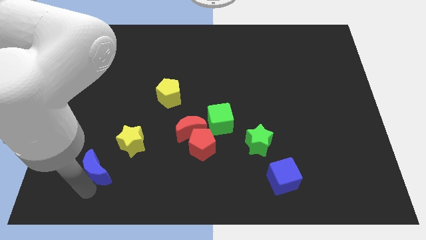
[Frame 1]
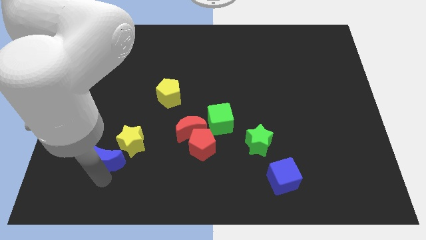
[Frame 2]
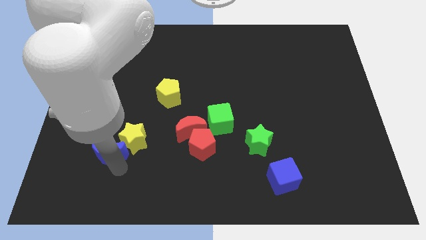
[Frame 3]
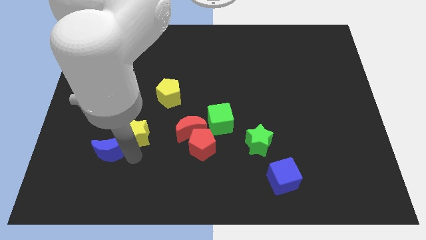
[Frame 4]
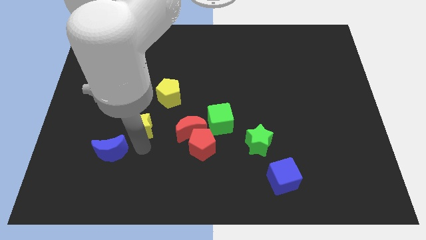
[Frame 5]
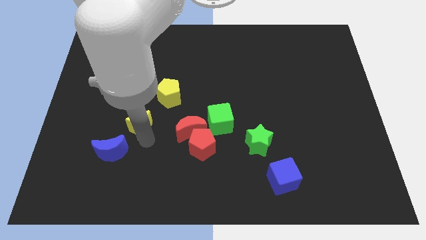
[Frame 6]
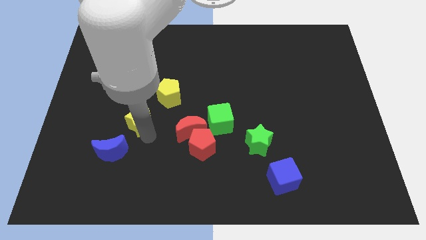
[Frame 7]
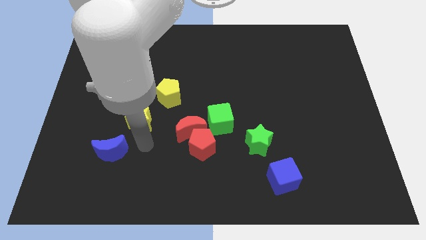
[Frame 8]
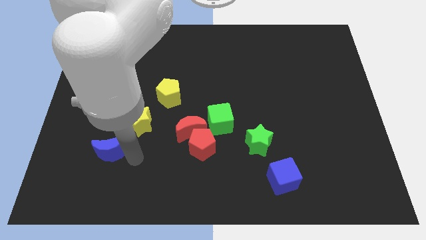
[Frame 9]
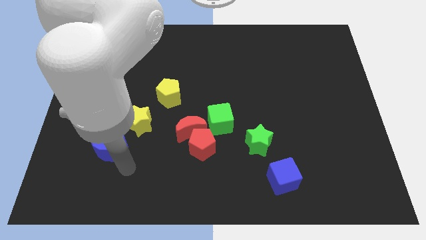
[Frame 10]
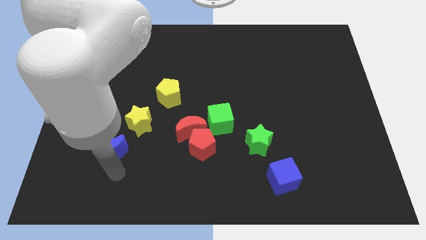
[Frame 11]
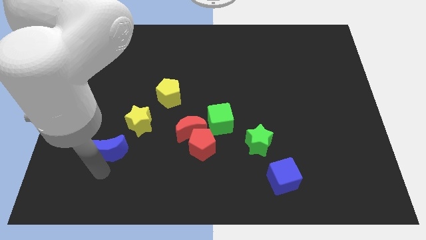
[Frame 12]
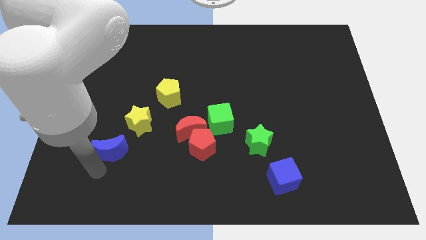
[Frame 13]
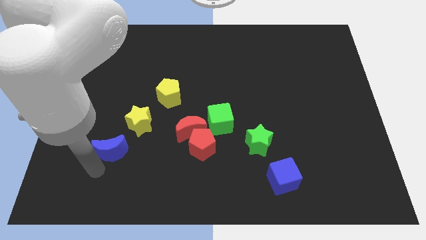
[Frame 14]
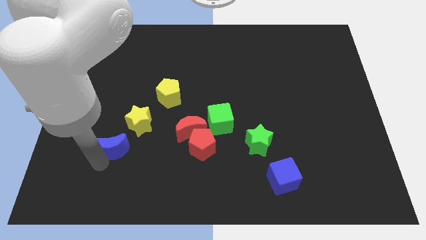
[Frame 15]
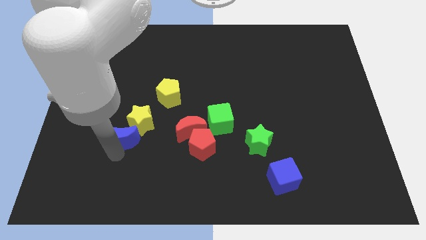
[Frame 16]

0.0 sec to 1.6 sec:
move the blue moon into the yellow star

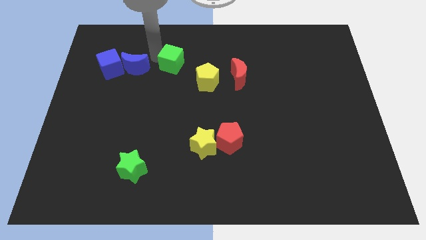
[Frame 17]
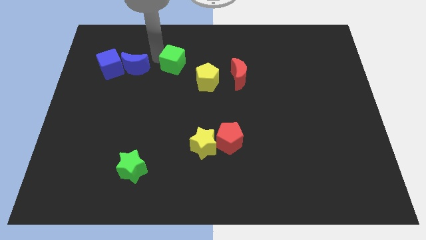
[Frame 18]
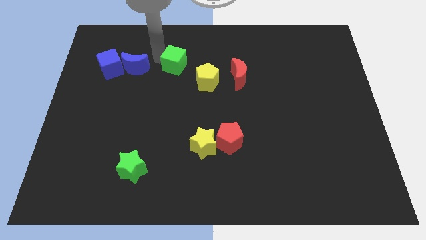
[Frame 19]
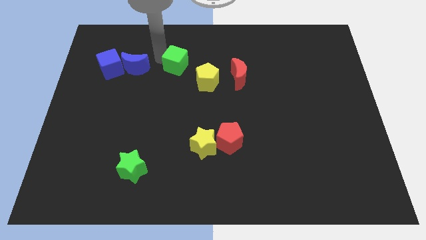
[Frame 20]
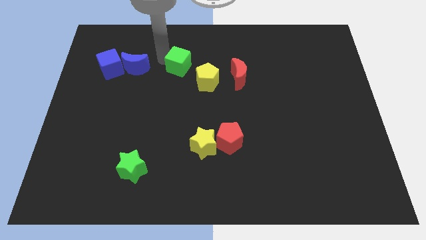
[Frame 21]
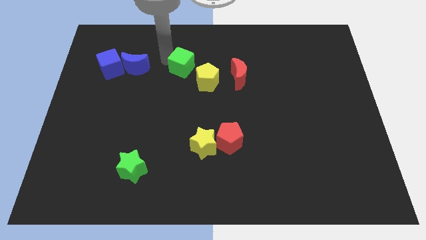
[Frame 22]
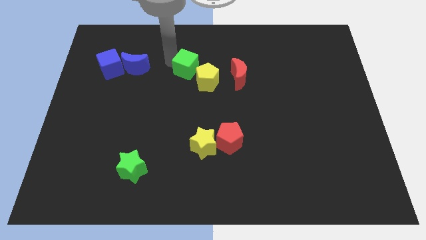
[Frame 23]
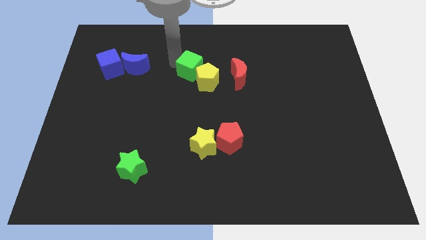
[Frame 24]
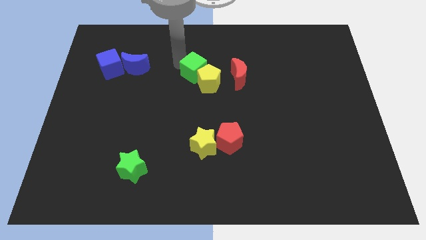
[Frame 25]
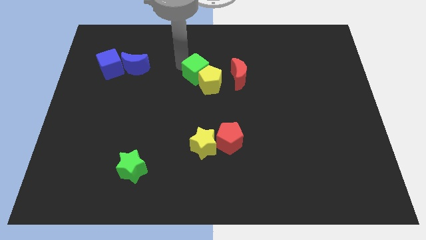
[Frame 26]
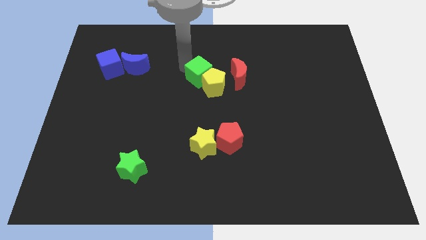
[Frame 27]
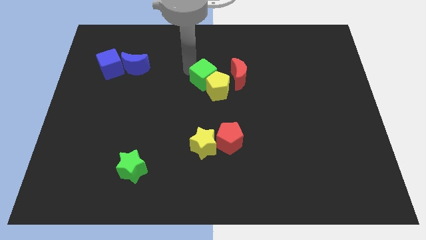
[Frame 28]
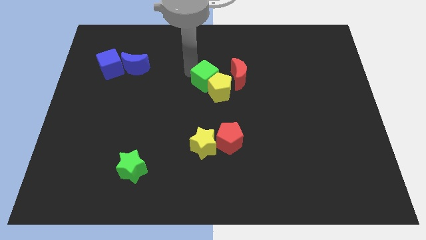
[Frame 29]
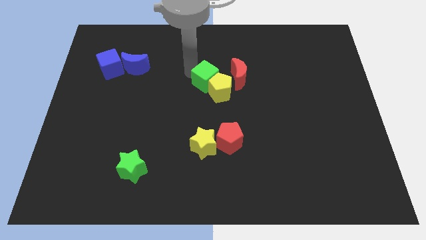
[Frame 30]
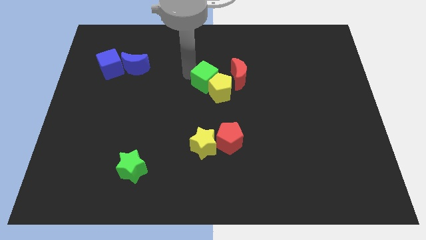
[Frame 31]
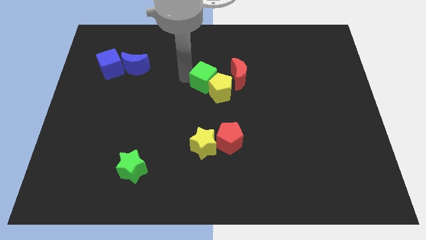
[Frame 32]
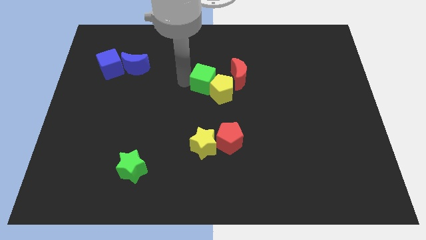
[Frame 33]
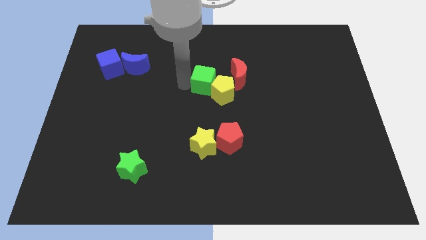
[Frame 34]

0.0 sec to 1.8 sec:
move the green cube into the yellow pentagon

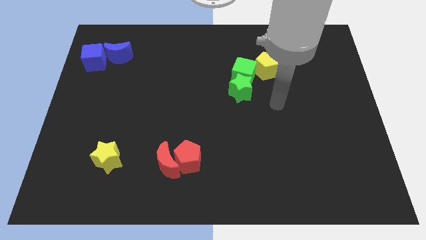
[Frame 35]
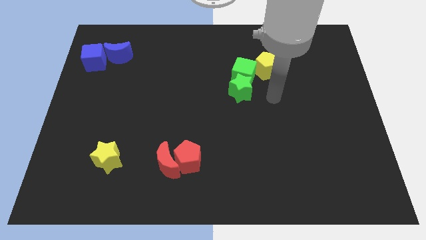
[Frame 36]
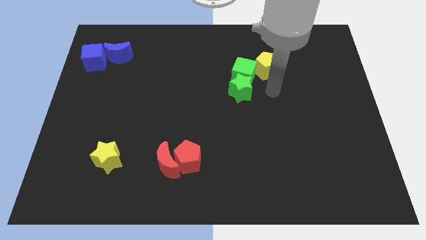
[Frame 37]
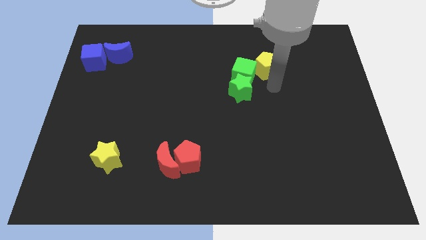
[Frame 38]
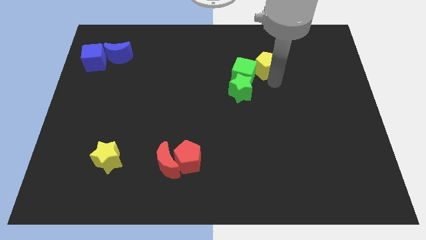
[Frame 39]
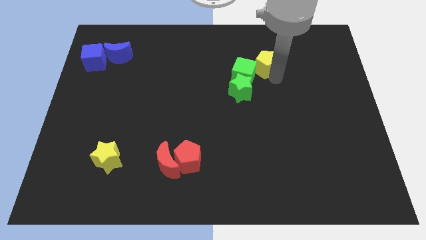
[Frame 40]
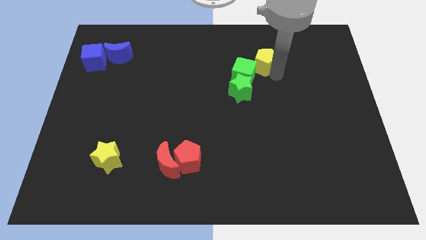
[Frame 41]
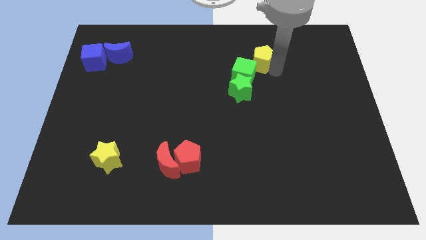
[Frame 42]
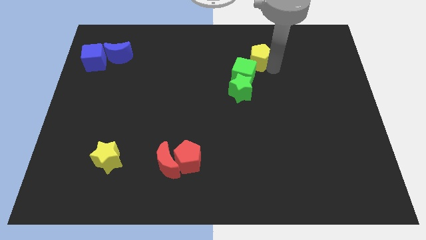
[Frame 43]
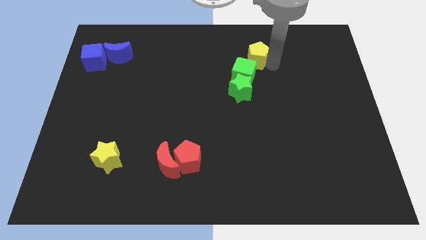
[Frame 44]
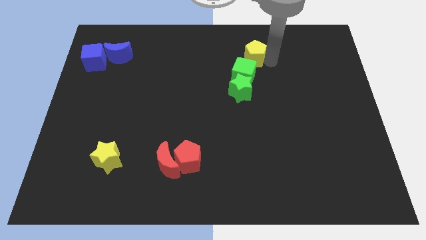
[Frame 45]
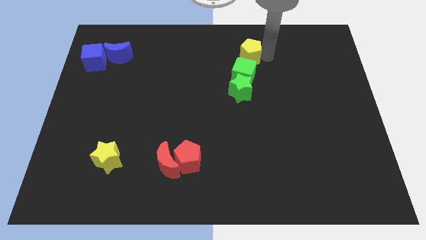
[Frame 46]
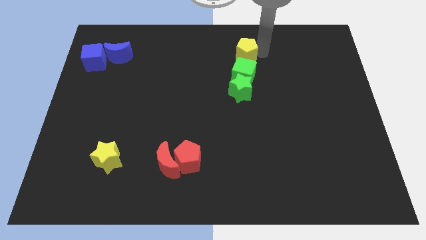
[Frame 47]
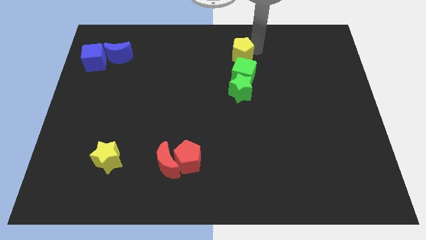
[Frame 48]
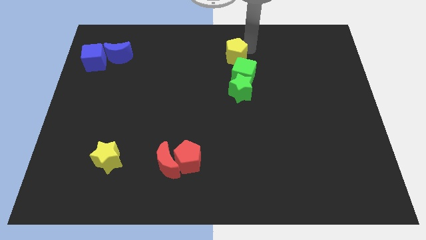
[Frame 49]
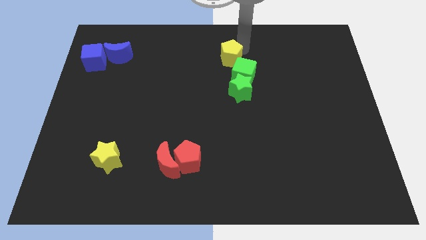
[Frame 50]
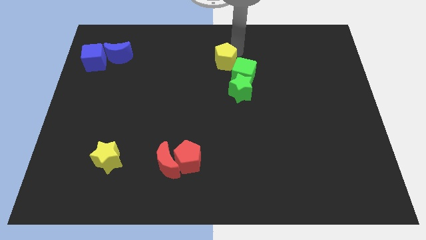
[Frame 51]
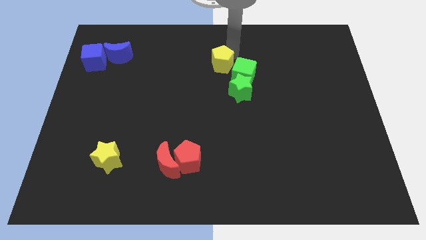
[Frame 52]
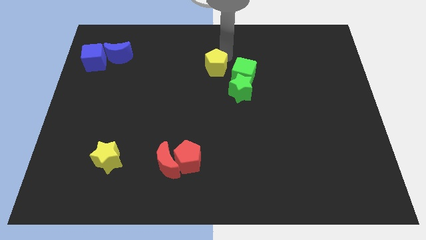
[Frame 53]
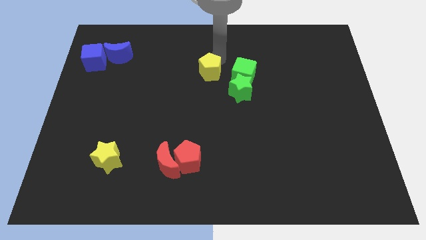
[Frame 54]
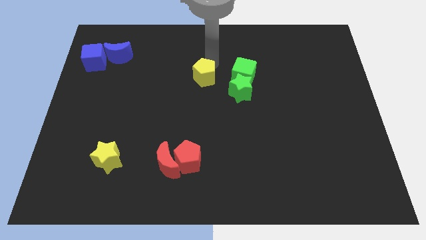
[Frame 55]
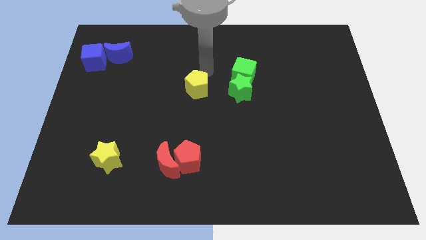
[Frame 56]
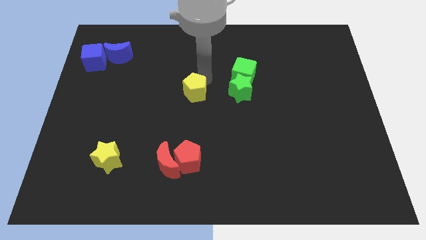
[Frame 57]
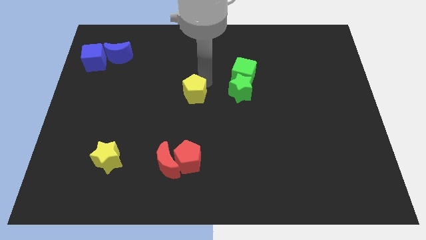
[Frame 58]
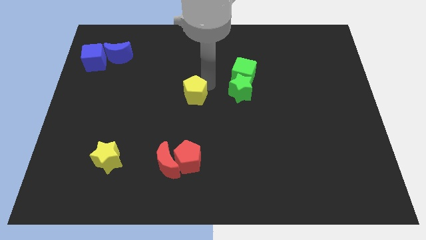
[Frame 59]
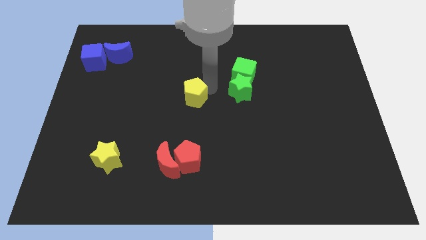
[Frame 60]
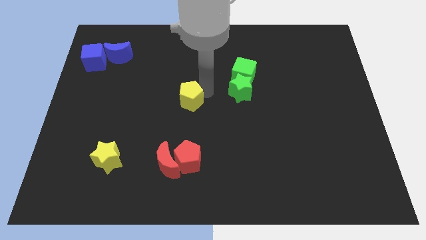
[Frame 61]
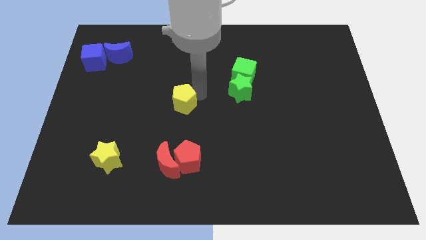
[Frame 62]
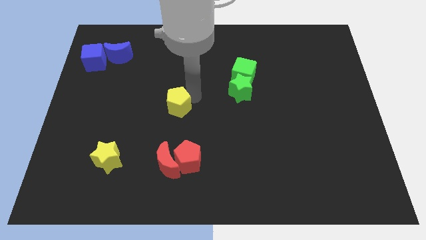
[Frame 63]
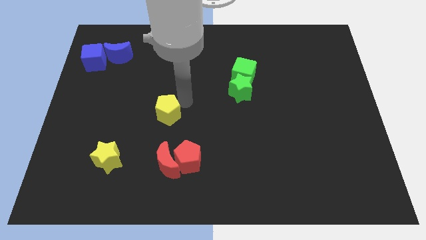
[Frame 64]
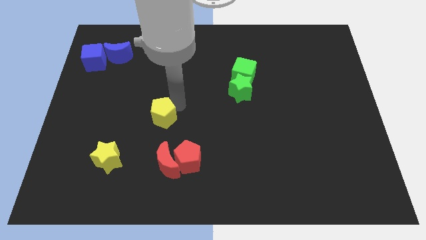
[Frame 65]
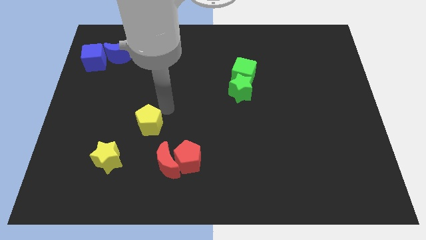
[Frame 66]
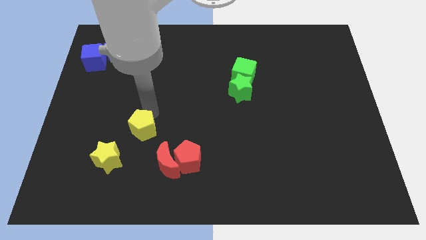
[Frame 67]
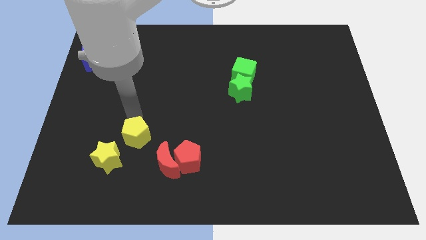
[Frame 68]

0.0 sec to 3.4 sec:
move the yellow pentagon to the top right side of the yellow star

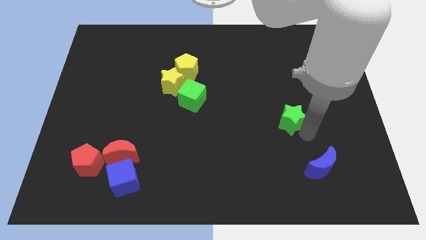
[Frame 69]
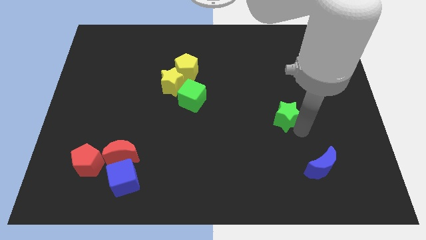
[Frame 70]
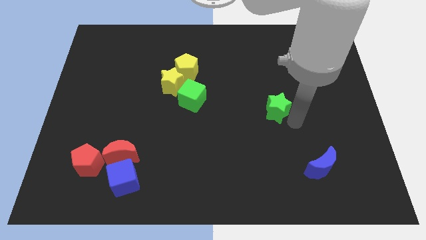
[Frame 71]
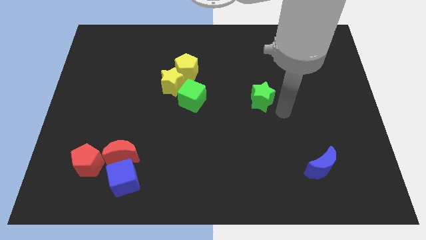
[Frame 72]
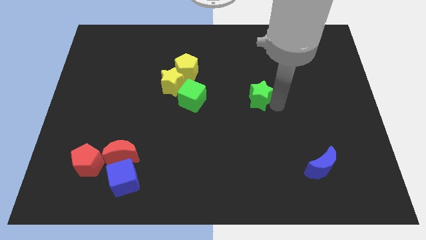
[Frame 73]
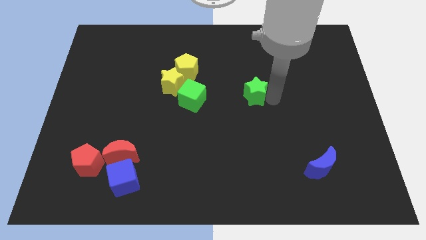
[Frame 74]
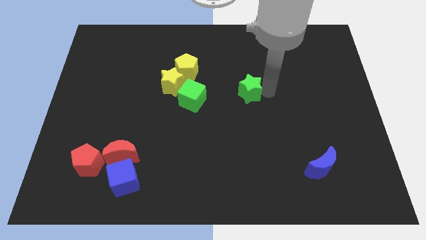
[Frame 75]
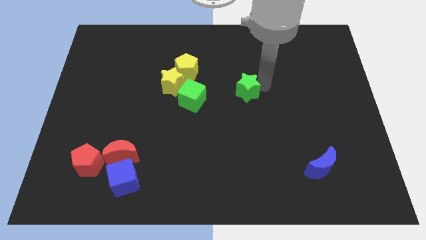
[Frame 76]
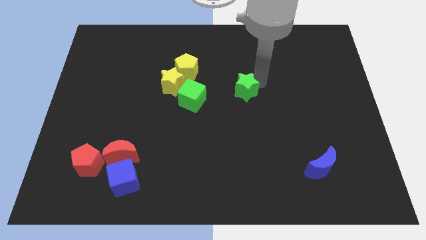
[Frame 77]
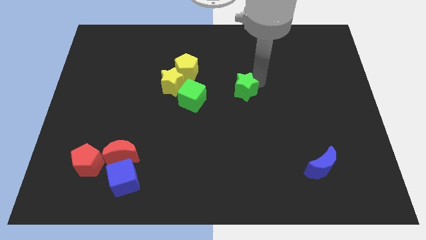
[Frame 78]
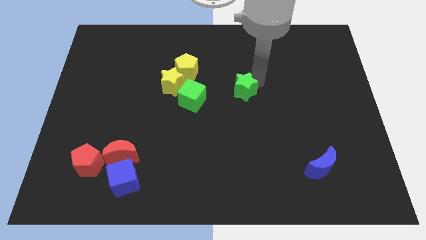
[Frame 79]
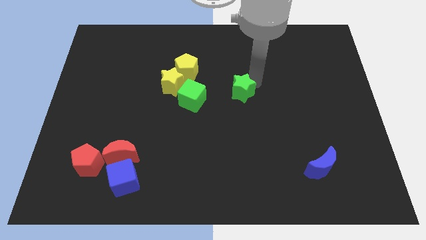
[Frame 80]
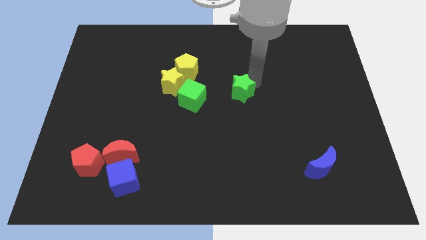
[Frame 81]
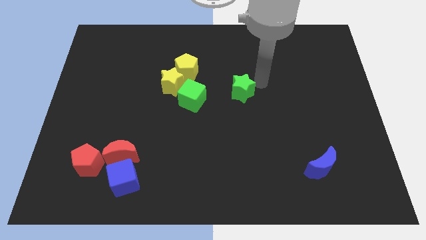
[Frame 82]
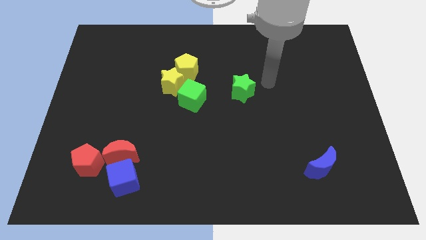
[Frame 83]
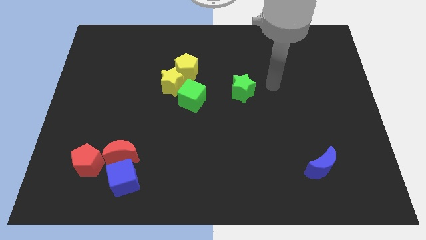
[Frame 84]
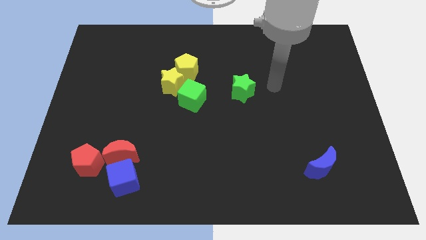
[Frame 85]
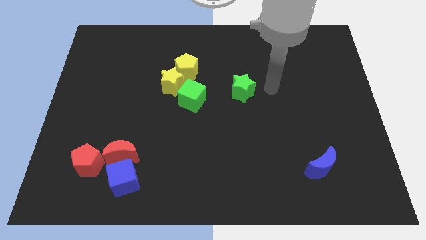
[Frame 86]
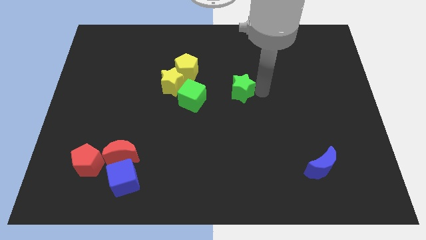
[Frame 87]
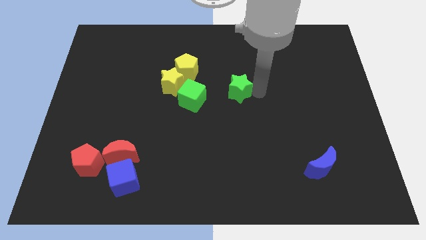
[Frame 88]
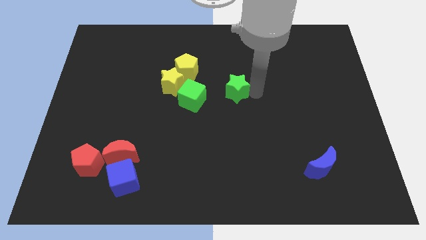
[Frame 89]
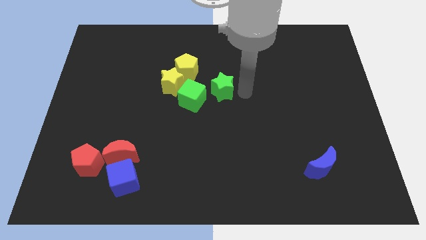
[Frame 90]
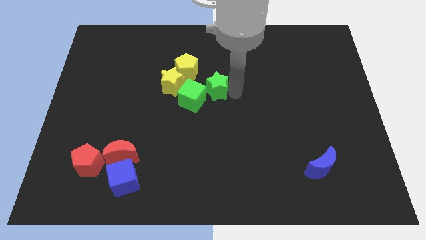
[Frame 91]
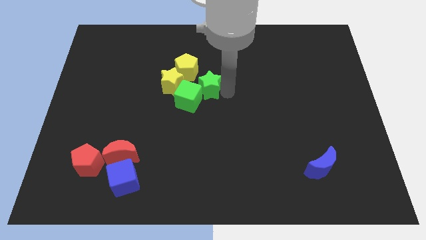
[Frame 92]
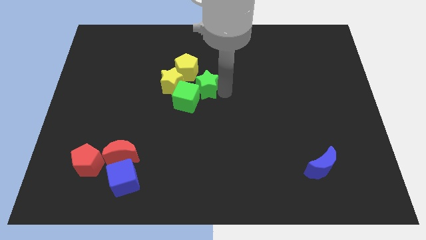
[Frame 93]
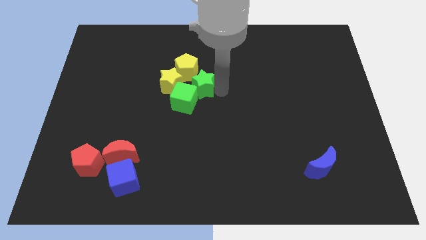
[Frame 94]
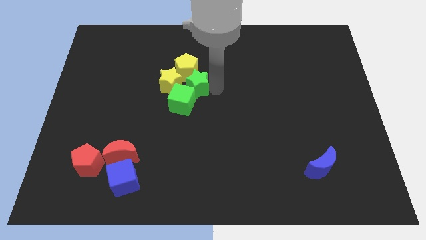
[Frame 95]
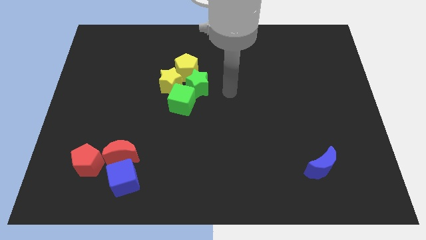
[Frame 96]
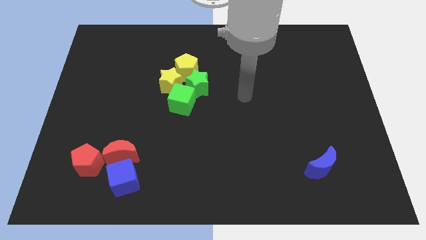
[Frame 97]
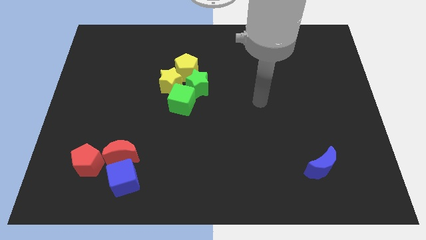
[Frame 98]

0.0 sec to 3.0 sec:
move the green star to the right of the yellow star
